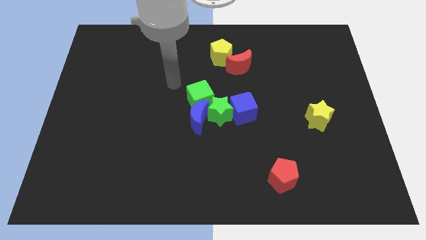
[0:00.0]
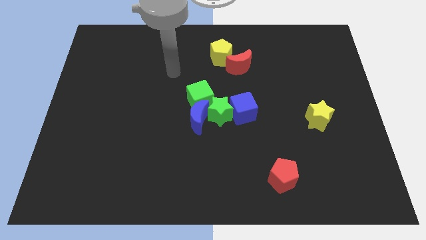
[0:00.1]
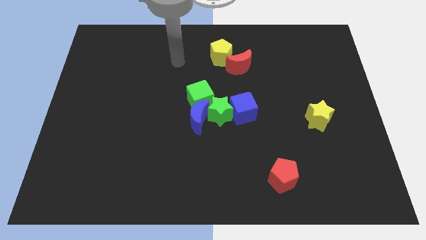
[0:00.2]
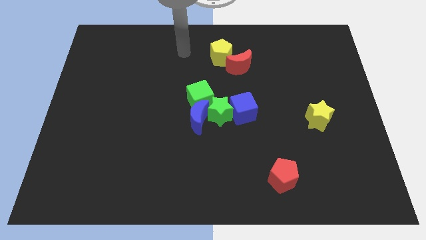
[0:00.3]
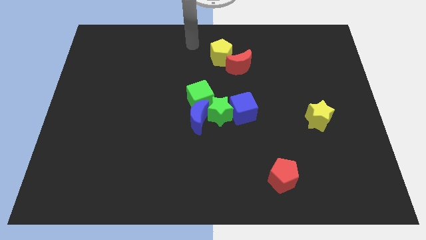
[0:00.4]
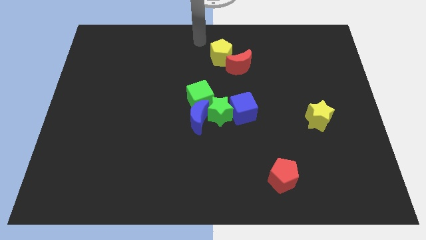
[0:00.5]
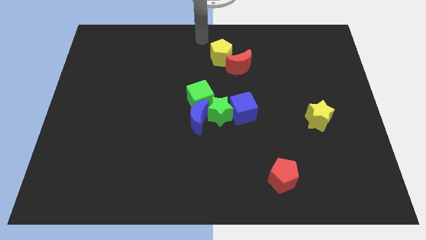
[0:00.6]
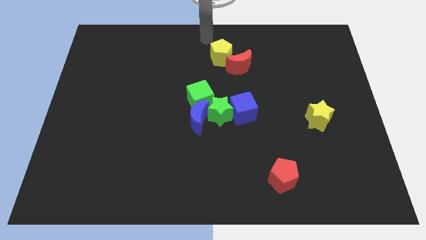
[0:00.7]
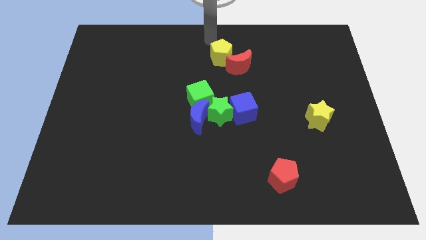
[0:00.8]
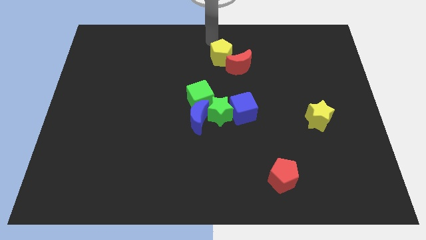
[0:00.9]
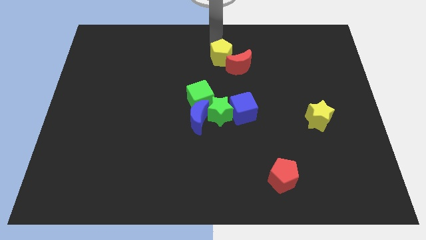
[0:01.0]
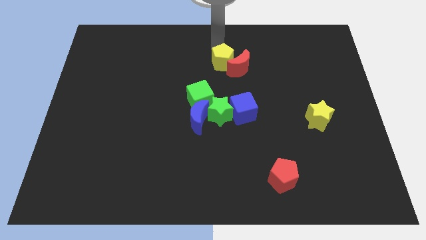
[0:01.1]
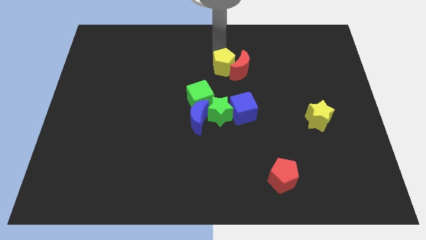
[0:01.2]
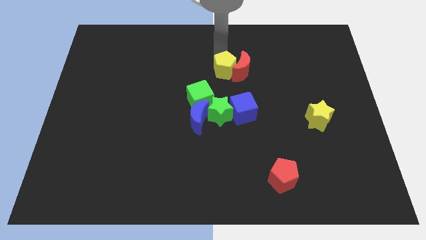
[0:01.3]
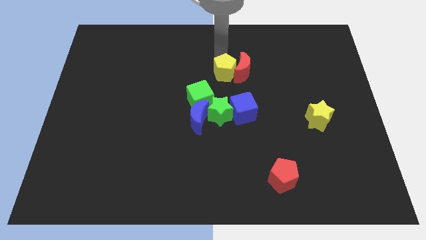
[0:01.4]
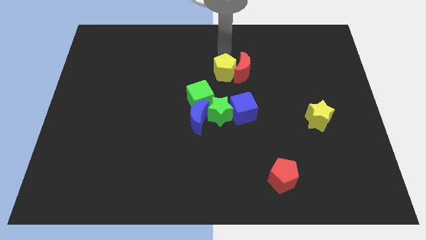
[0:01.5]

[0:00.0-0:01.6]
put the yellow pentagon to the left side of the red crescent

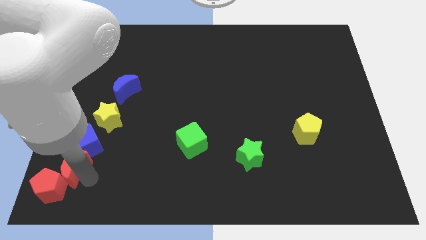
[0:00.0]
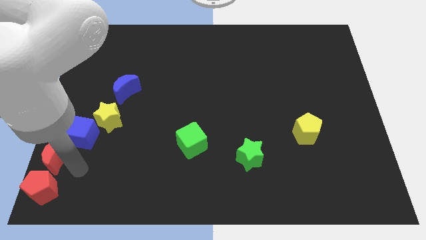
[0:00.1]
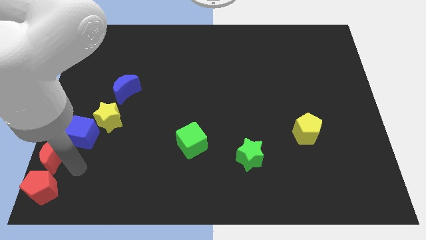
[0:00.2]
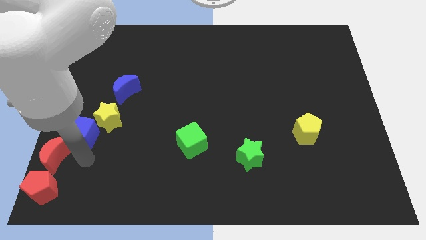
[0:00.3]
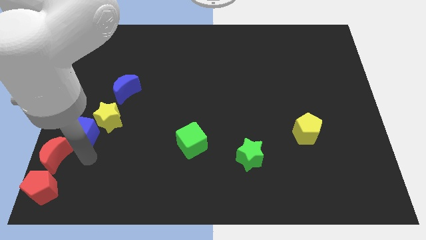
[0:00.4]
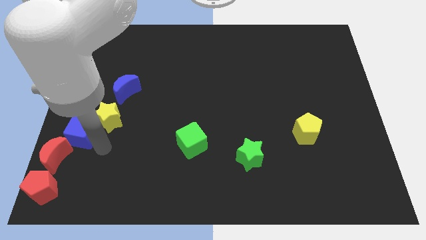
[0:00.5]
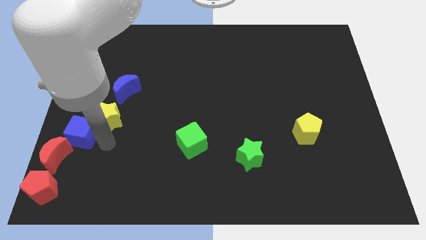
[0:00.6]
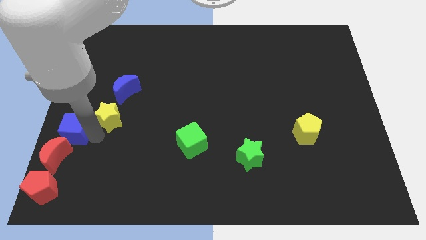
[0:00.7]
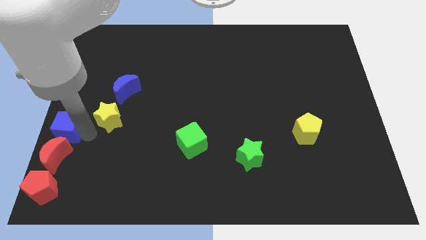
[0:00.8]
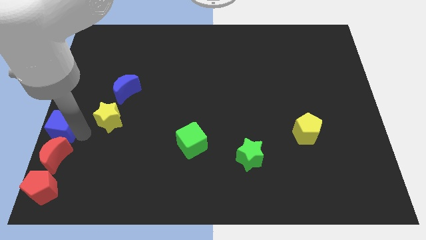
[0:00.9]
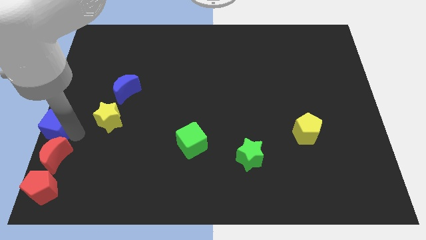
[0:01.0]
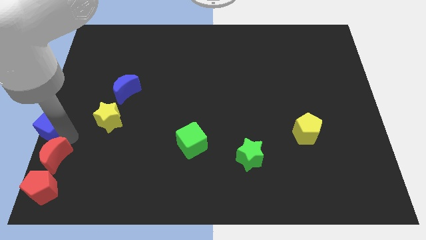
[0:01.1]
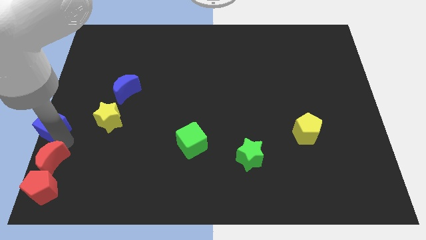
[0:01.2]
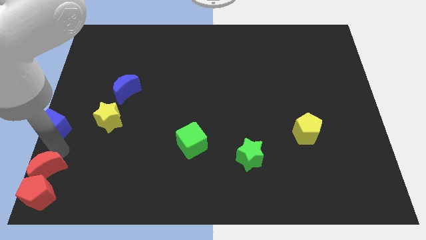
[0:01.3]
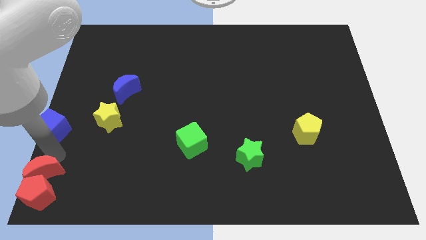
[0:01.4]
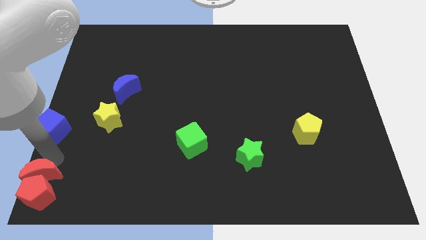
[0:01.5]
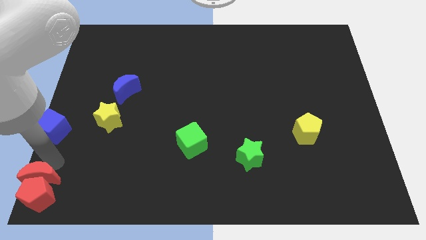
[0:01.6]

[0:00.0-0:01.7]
move the red moon above the red pentagon

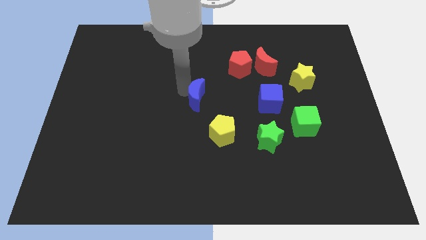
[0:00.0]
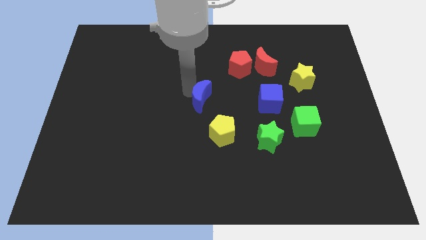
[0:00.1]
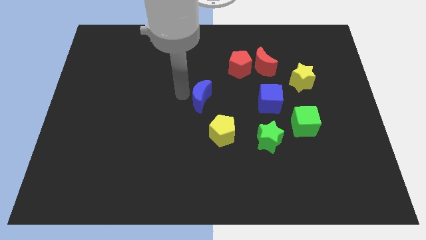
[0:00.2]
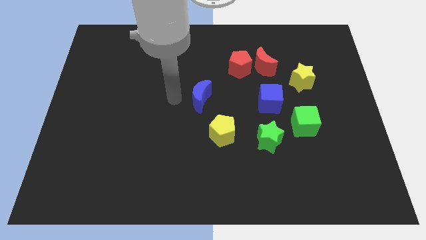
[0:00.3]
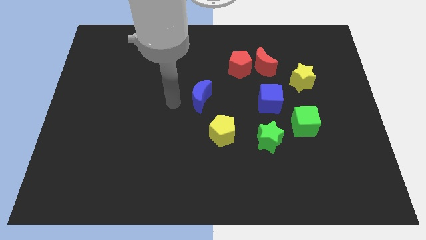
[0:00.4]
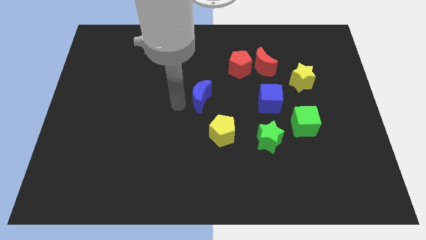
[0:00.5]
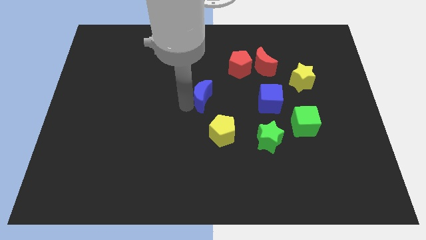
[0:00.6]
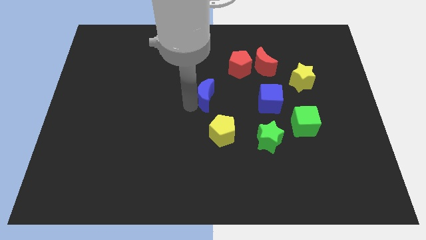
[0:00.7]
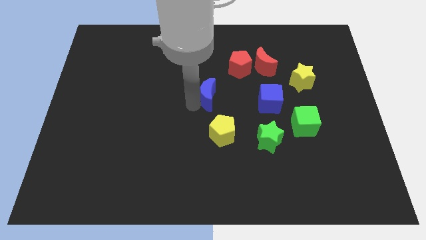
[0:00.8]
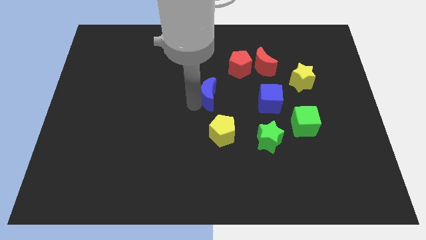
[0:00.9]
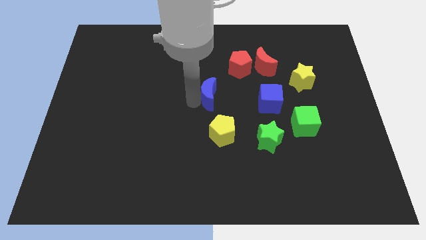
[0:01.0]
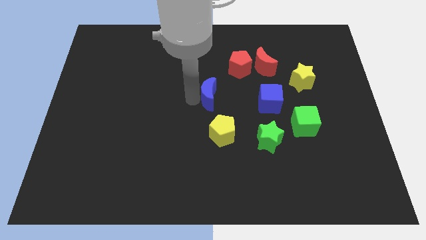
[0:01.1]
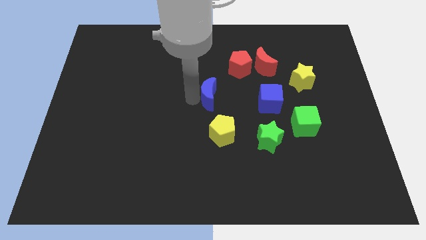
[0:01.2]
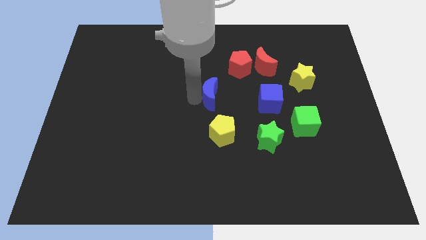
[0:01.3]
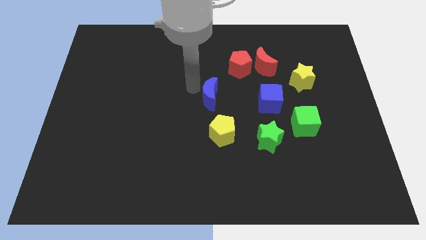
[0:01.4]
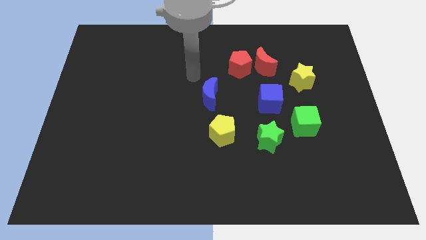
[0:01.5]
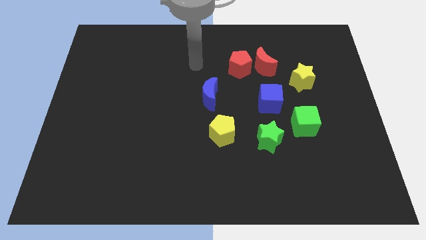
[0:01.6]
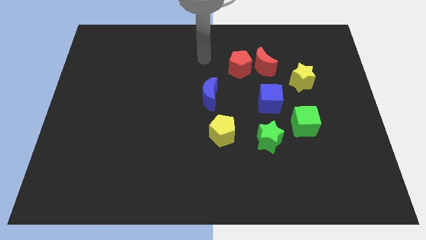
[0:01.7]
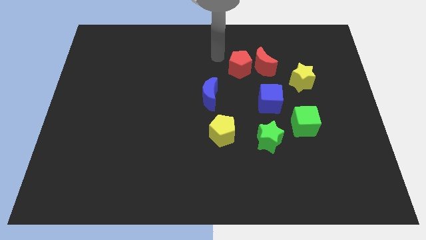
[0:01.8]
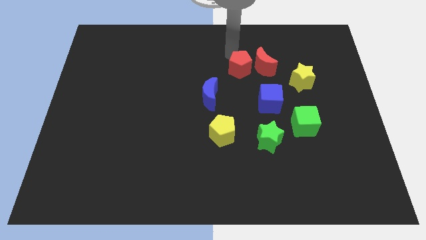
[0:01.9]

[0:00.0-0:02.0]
move blue moon to the middle of the board

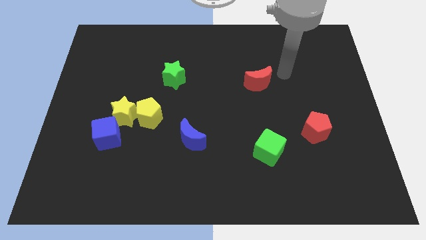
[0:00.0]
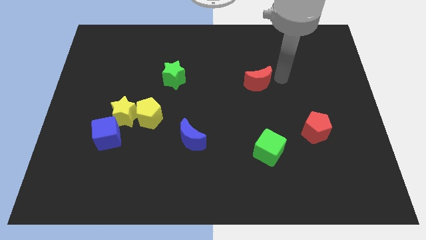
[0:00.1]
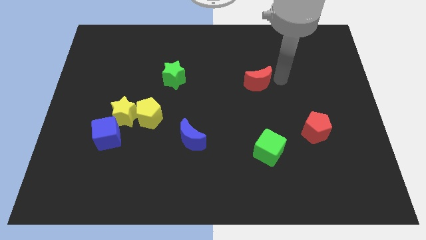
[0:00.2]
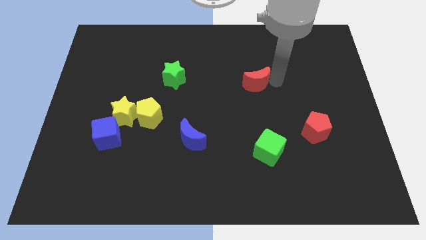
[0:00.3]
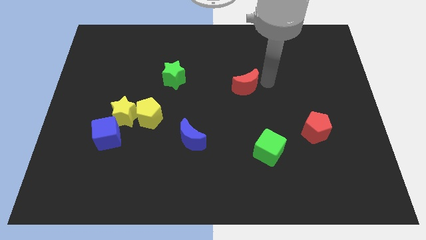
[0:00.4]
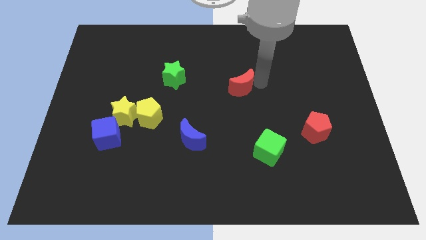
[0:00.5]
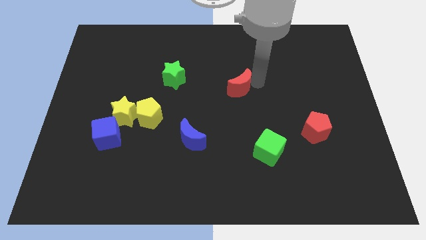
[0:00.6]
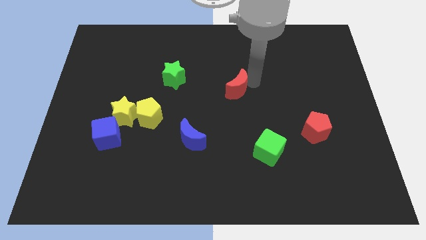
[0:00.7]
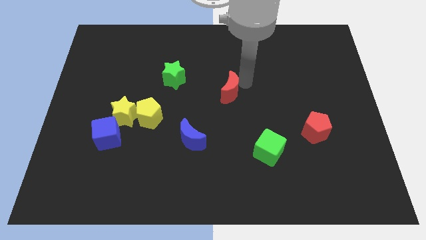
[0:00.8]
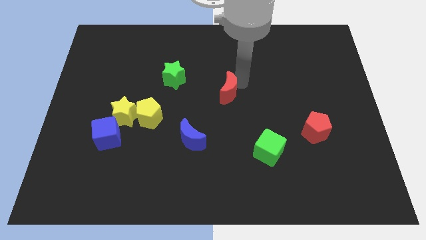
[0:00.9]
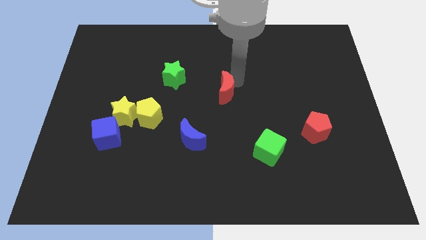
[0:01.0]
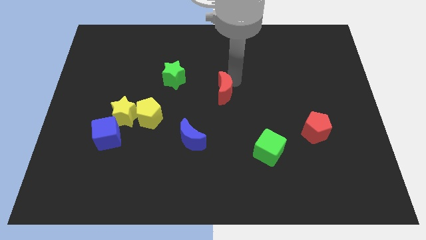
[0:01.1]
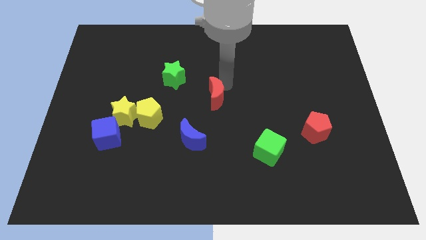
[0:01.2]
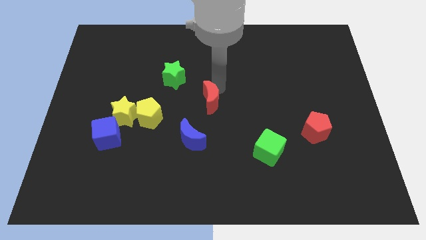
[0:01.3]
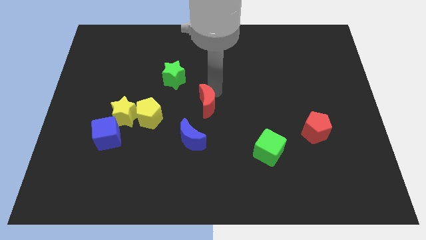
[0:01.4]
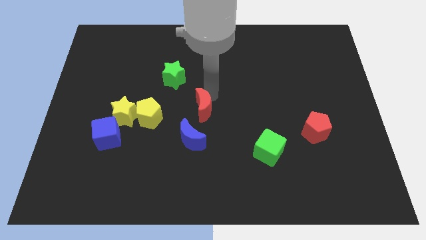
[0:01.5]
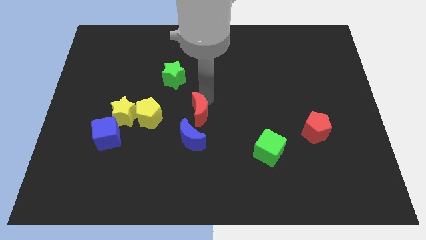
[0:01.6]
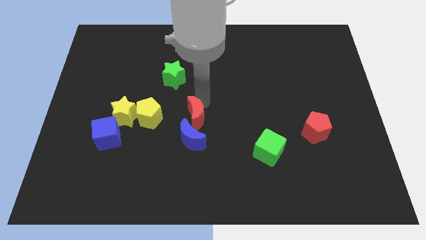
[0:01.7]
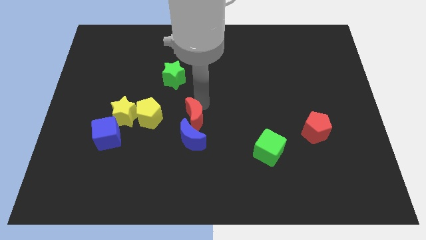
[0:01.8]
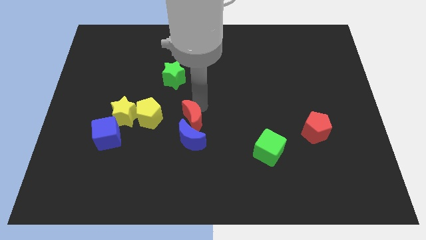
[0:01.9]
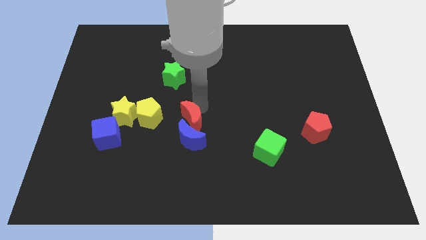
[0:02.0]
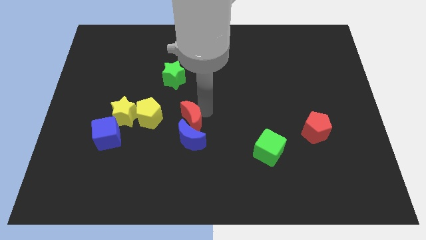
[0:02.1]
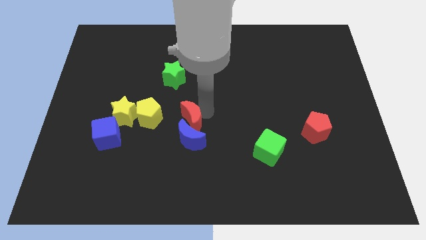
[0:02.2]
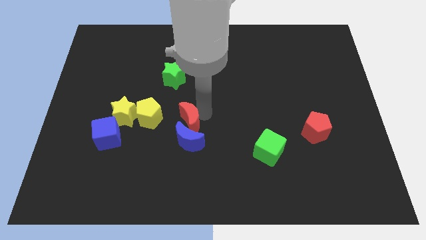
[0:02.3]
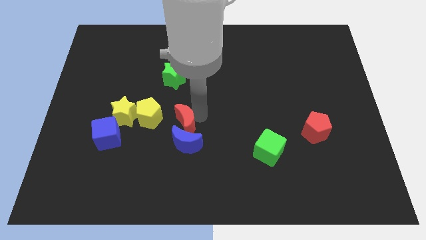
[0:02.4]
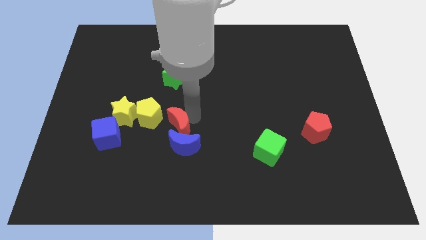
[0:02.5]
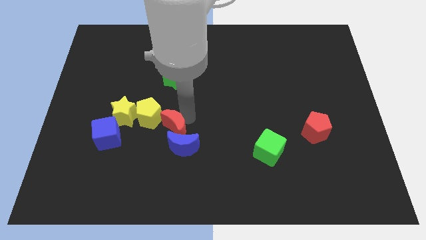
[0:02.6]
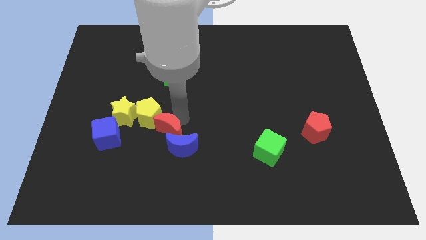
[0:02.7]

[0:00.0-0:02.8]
put the red moon between yellow pentagon and blue moon

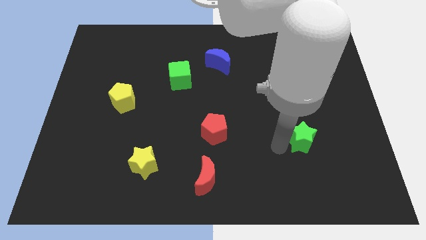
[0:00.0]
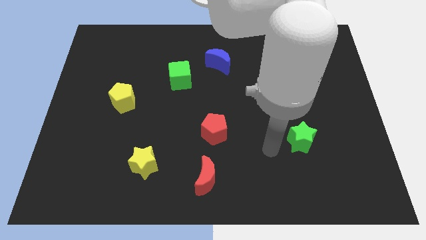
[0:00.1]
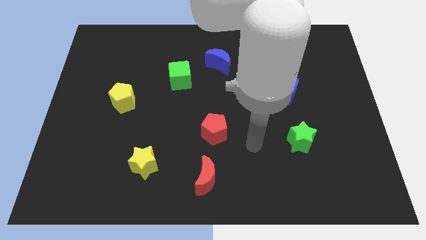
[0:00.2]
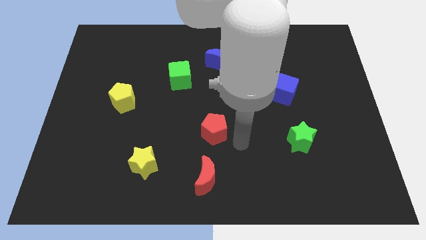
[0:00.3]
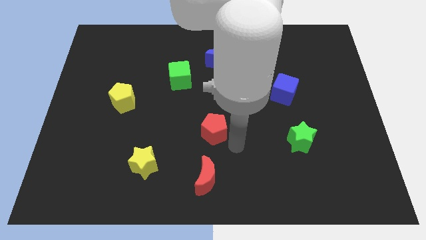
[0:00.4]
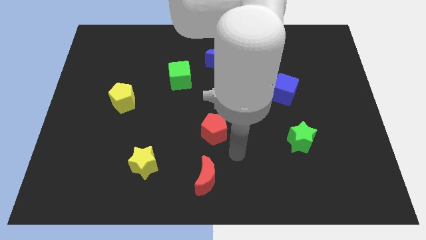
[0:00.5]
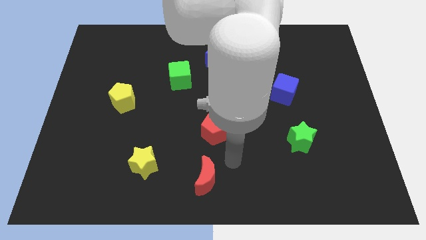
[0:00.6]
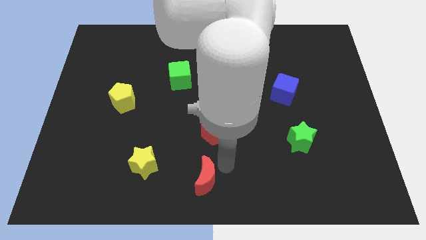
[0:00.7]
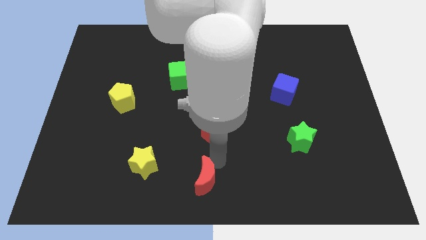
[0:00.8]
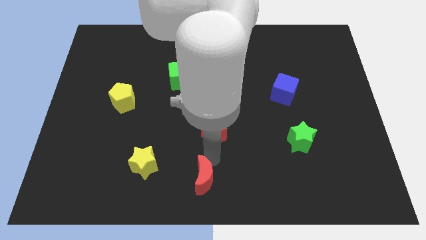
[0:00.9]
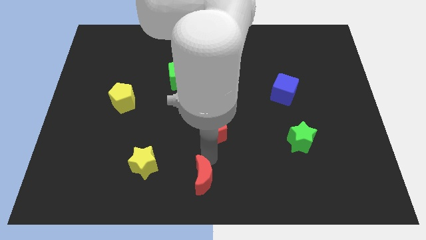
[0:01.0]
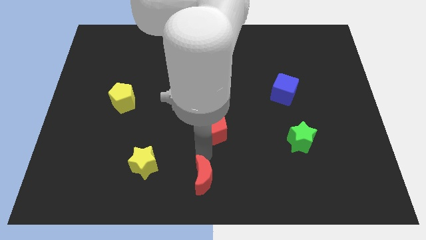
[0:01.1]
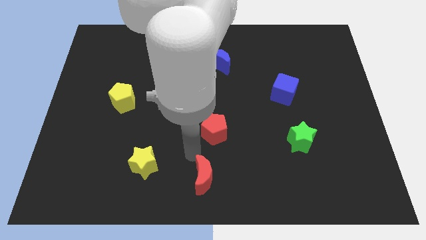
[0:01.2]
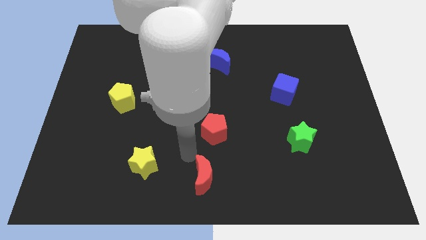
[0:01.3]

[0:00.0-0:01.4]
move the red moon slightly to the left
